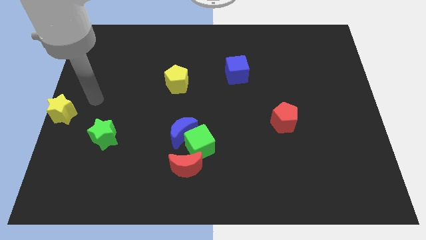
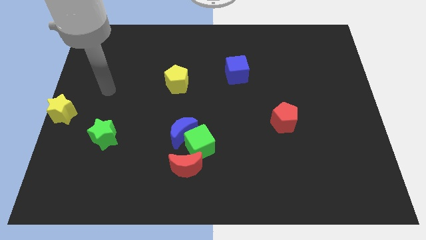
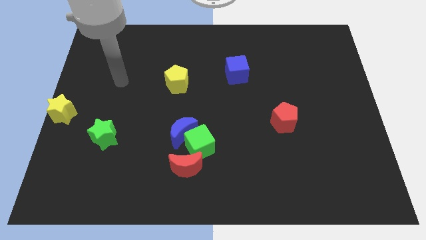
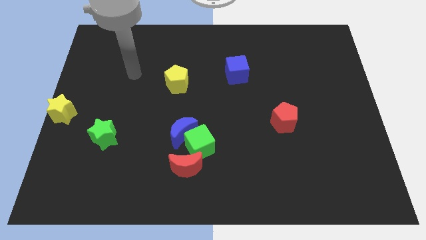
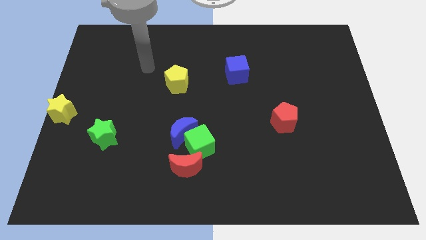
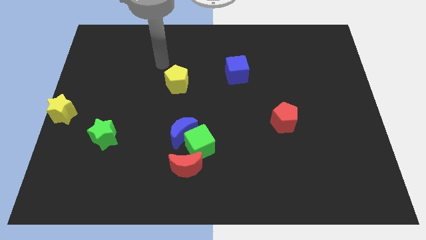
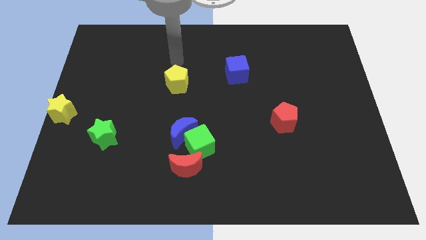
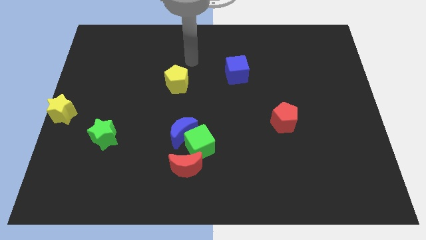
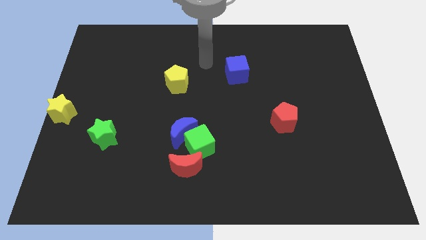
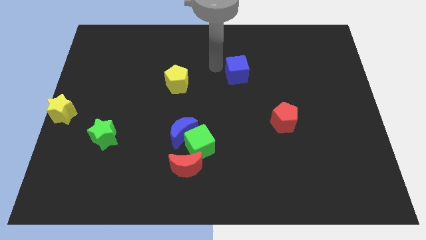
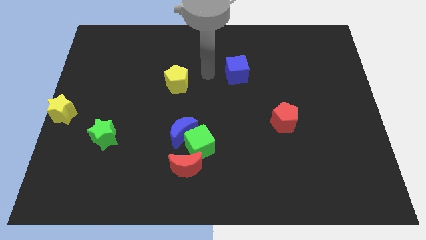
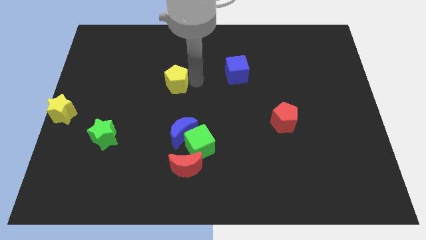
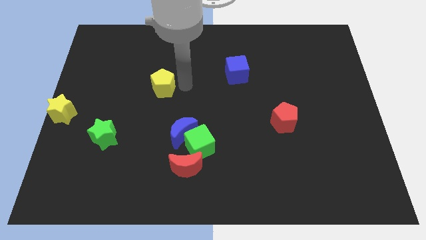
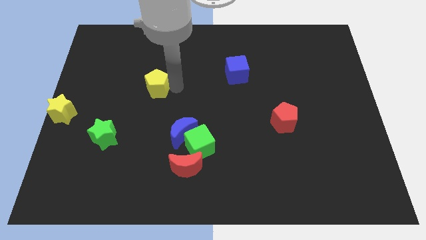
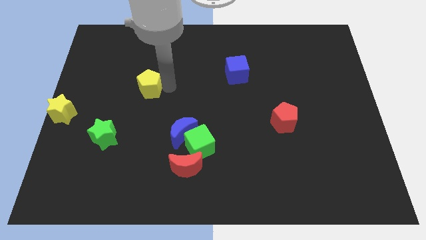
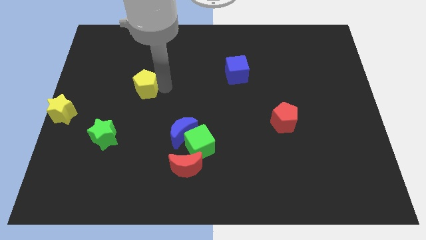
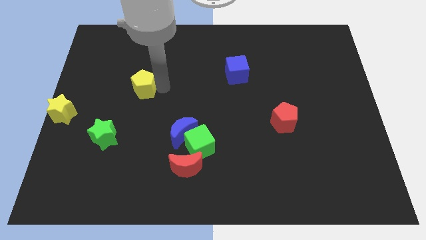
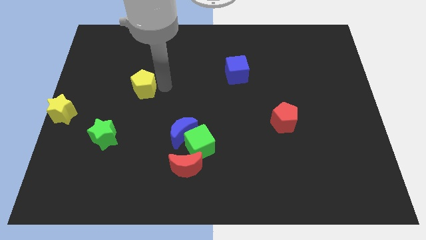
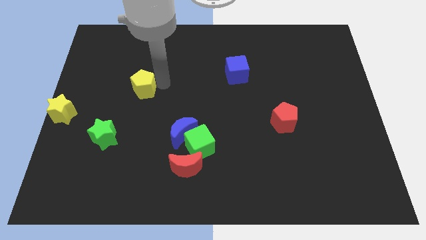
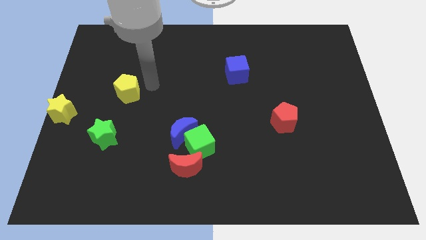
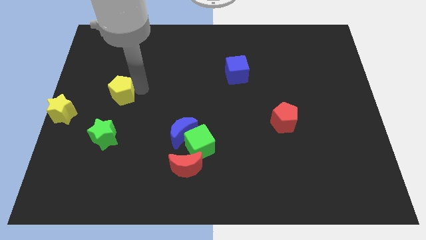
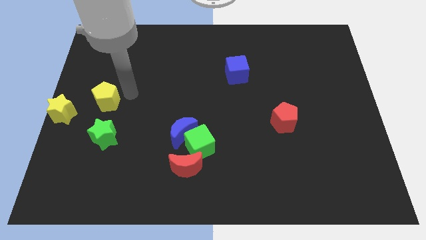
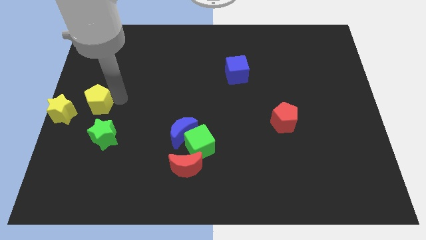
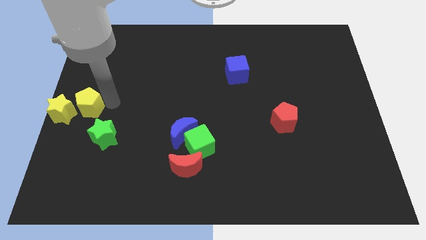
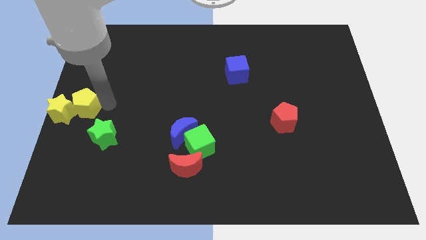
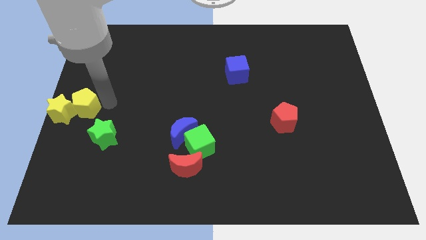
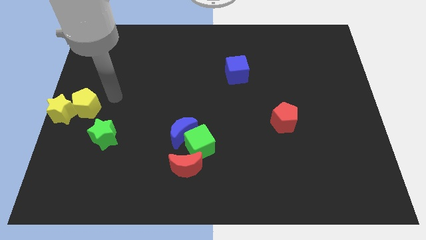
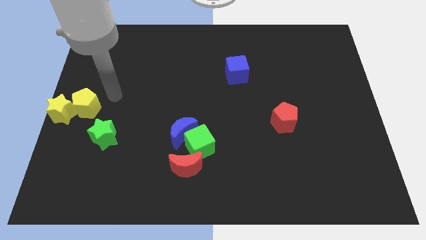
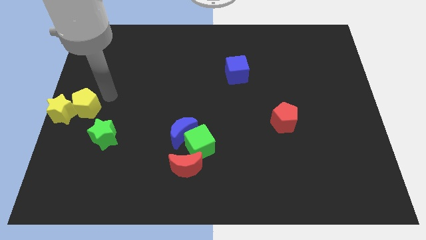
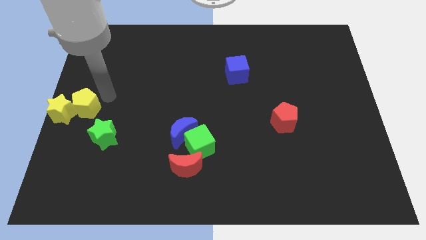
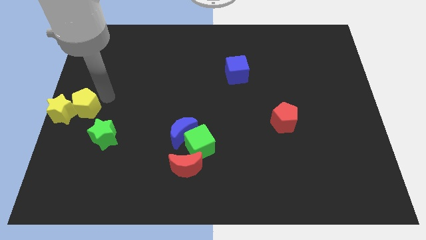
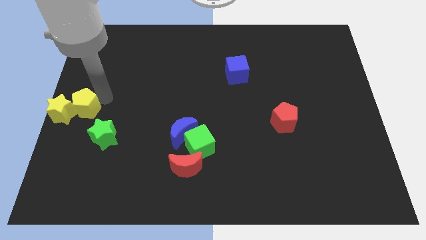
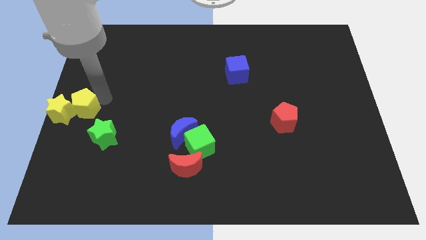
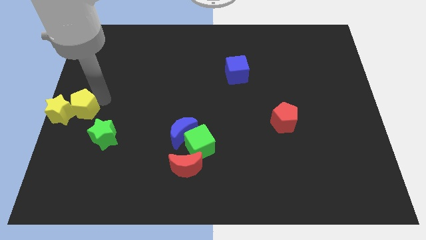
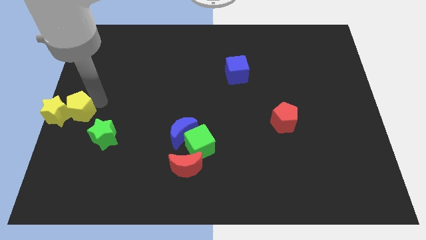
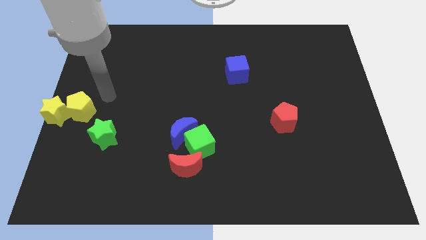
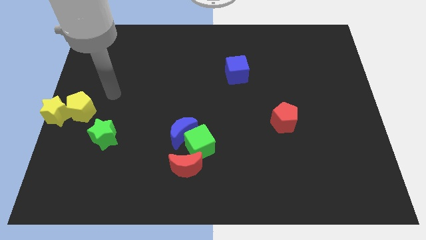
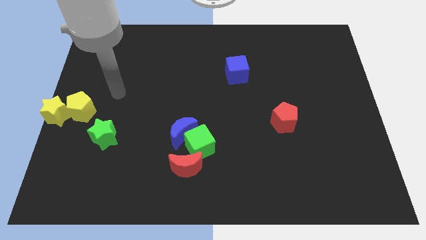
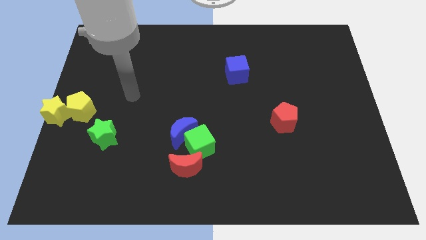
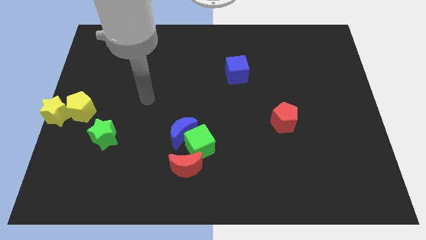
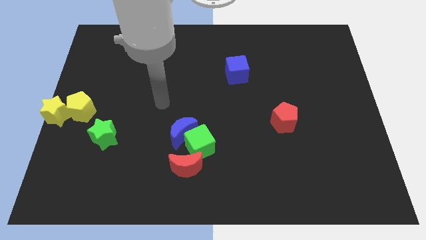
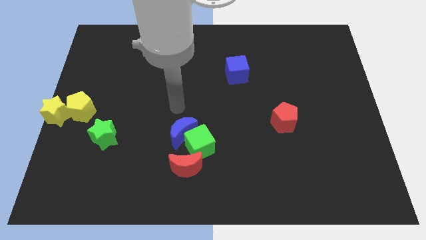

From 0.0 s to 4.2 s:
move the yellow pentagon to the right of the yellow star

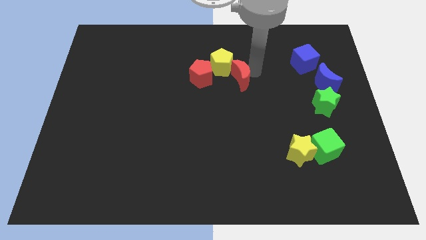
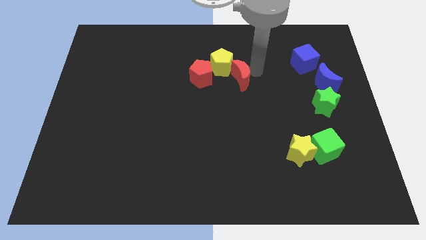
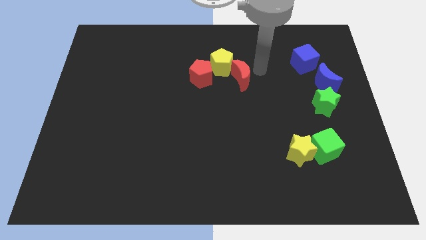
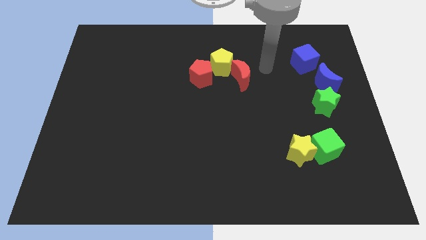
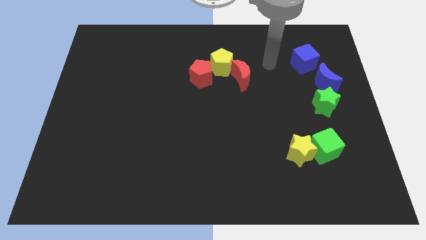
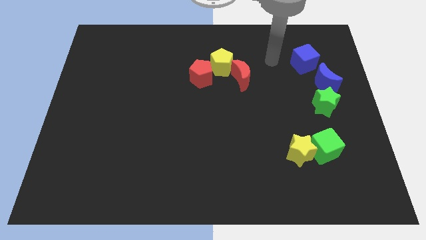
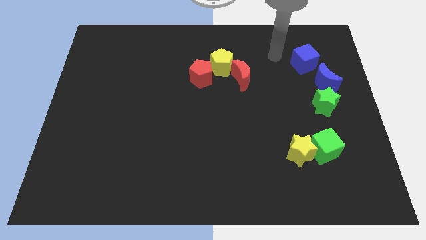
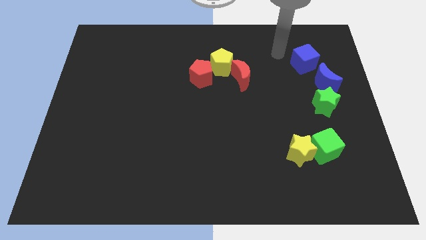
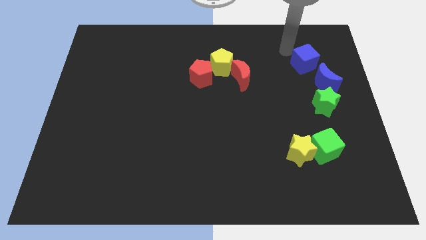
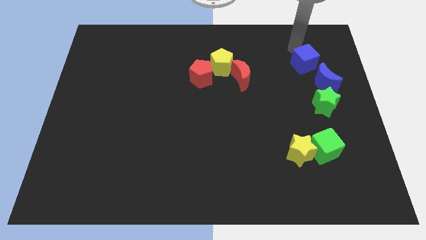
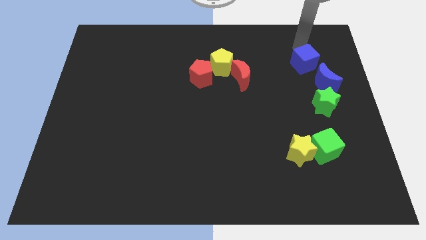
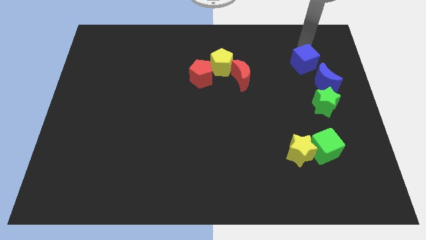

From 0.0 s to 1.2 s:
point your arm at the top of blue cube

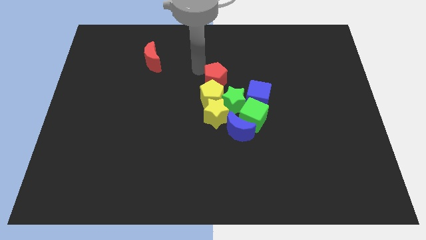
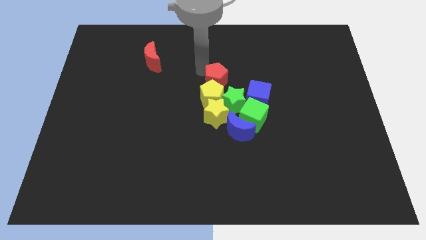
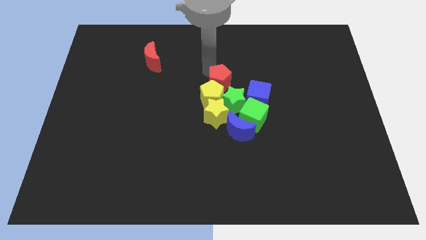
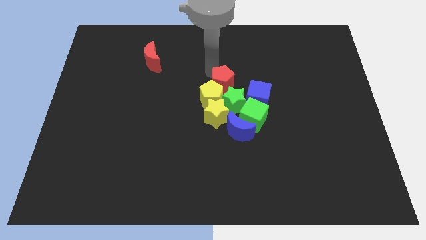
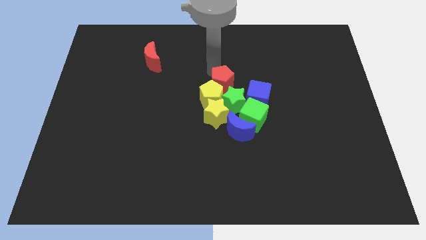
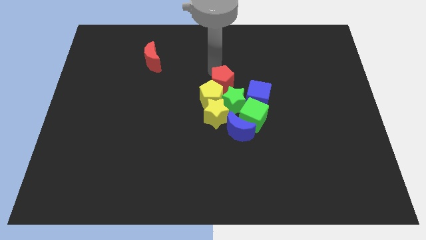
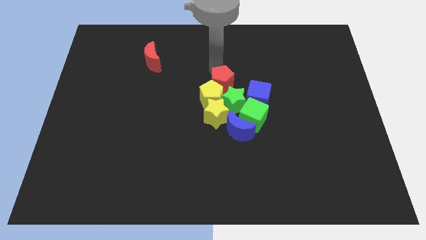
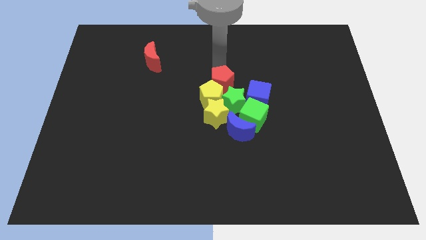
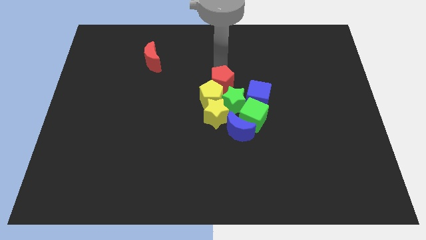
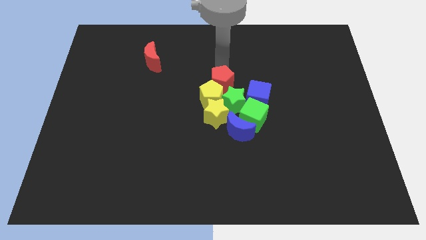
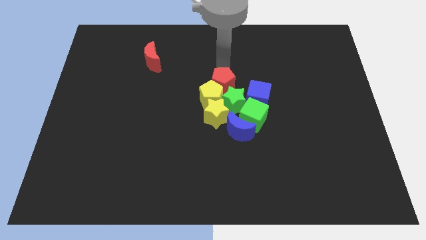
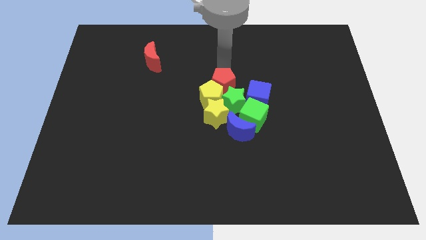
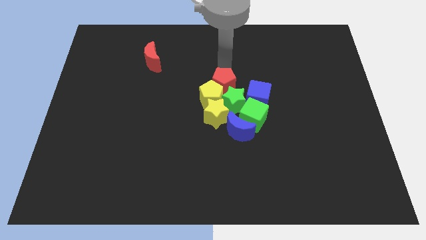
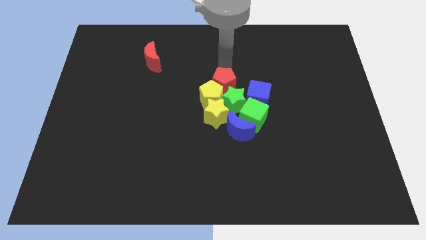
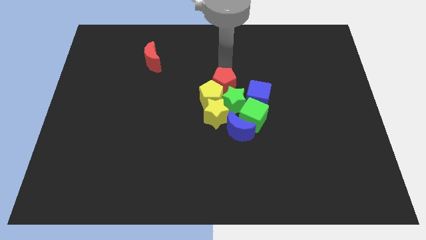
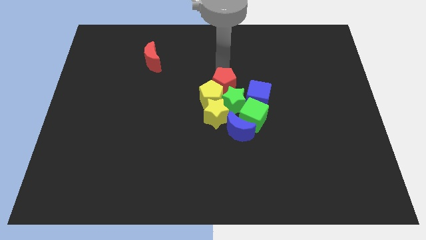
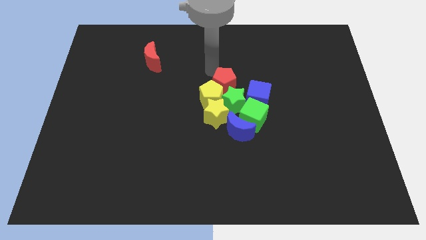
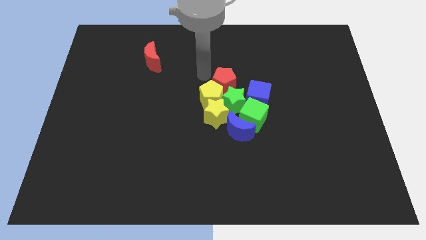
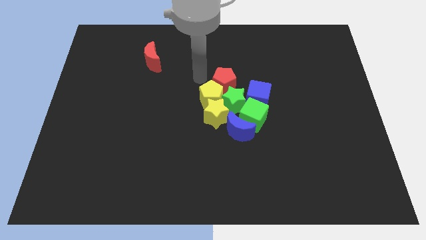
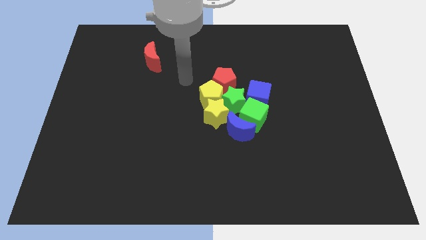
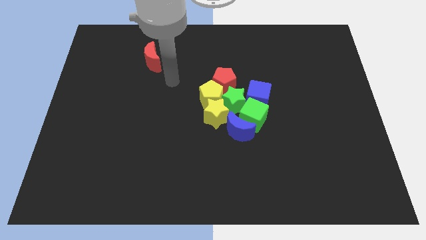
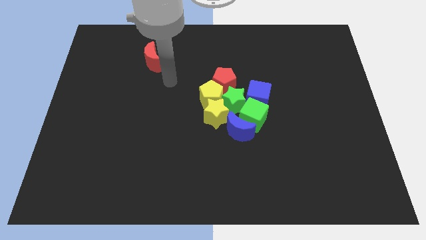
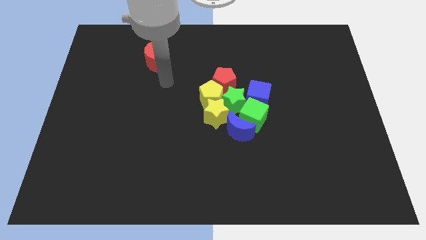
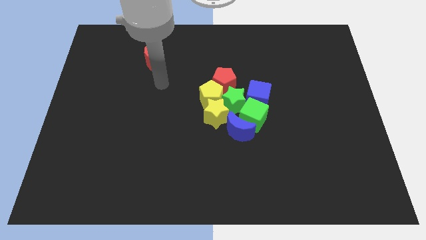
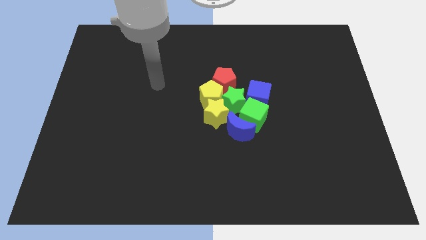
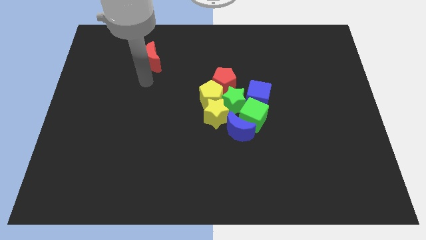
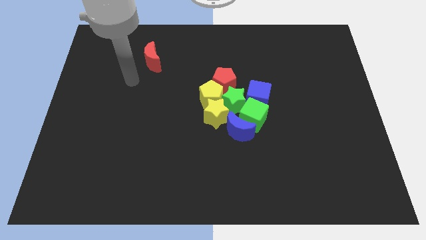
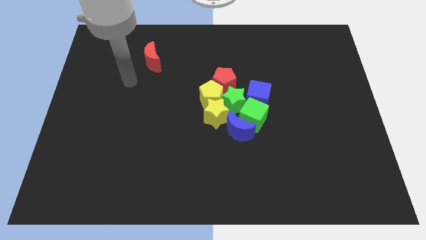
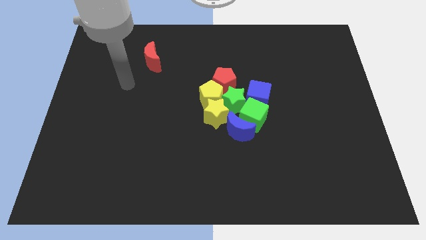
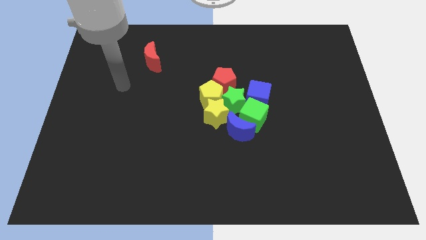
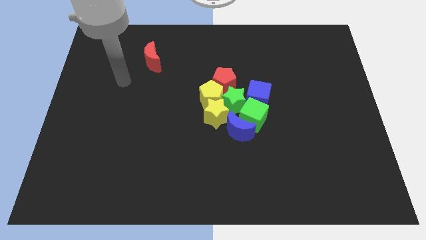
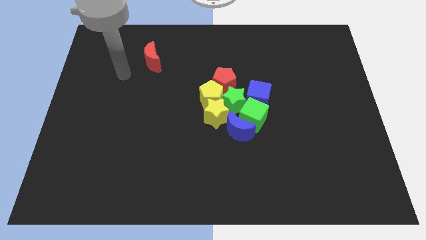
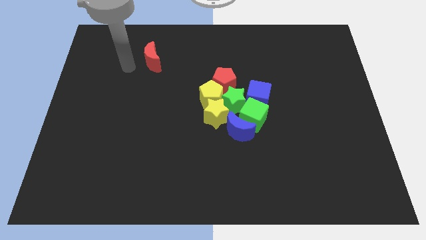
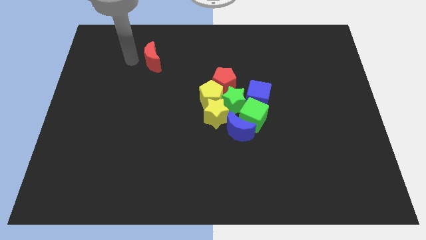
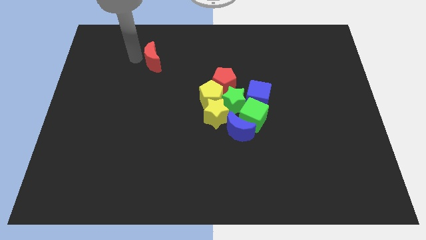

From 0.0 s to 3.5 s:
move your arm towards the red crescent

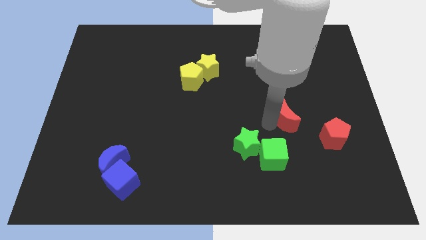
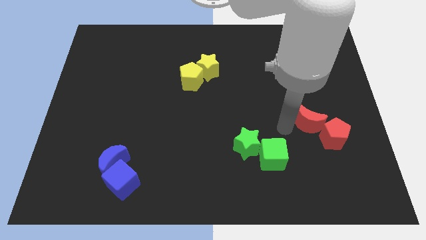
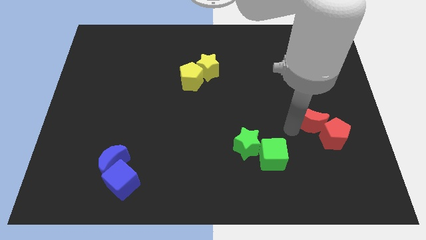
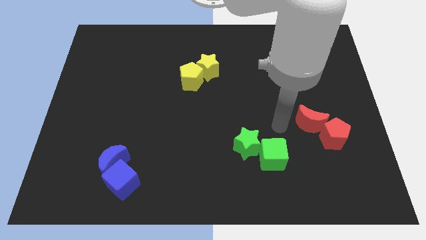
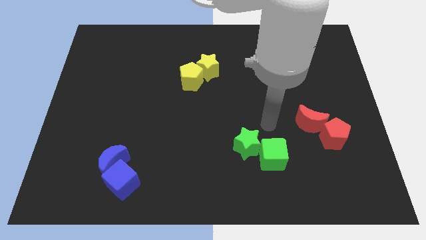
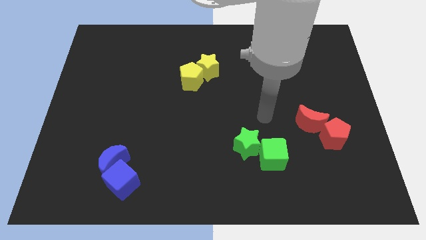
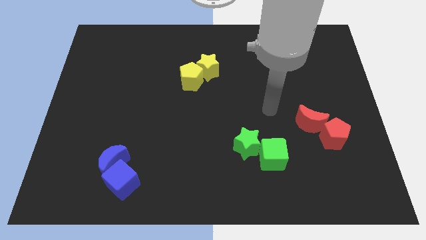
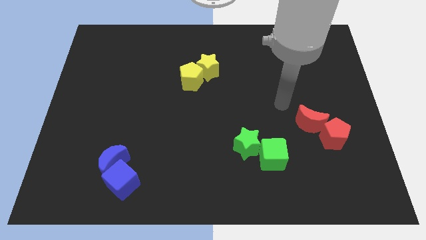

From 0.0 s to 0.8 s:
push the red moon into the red pentagon
